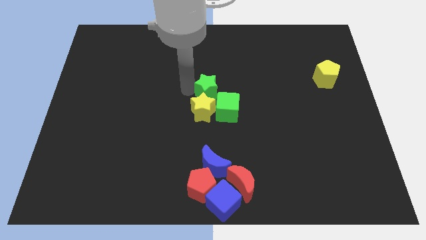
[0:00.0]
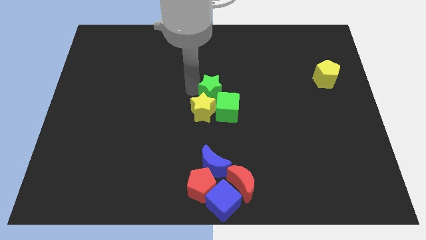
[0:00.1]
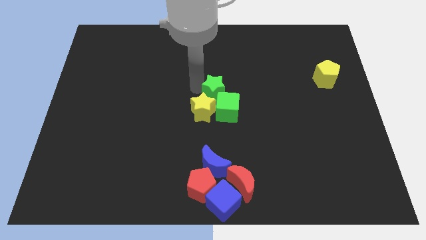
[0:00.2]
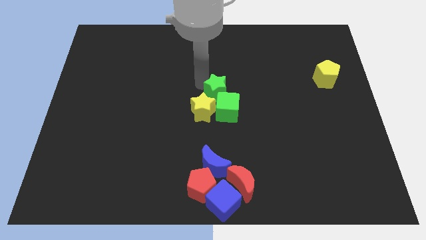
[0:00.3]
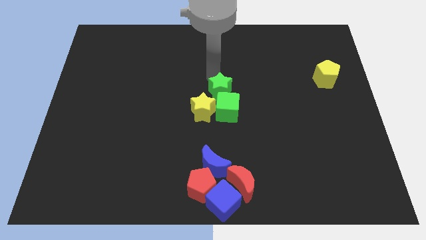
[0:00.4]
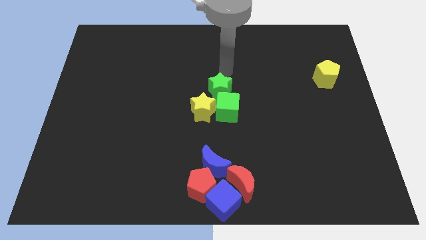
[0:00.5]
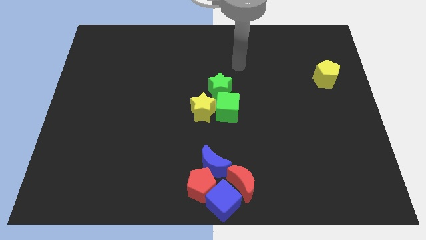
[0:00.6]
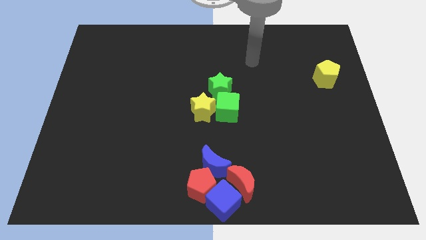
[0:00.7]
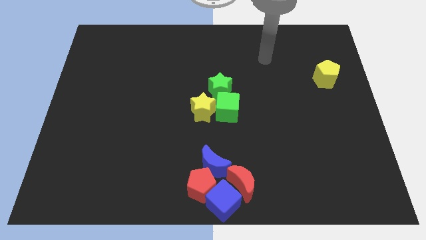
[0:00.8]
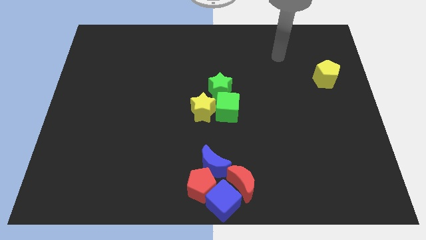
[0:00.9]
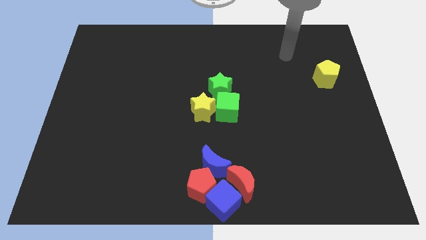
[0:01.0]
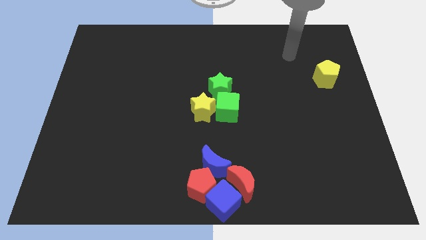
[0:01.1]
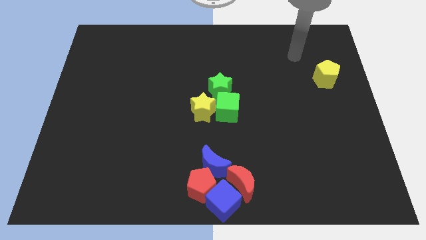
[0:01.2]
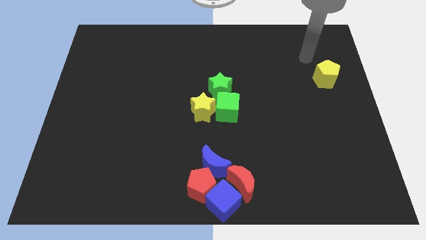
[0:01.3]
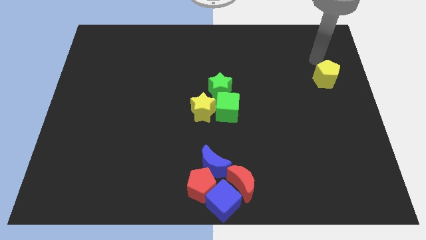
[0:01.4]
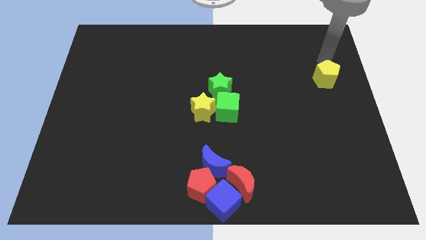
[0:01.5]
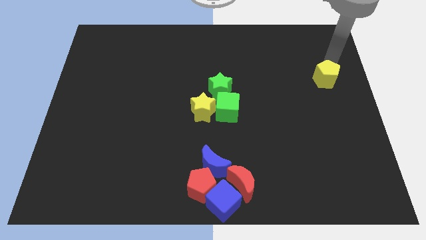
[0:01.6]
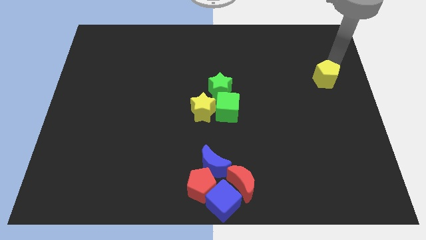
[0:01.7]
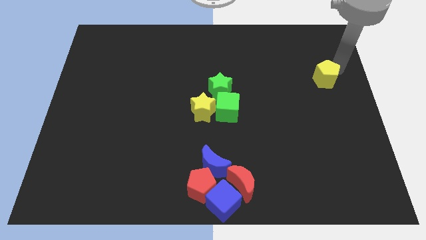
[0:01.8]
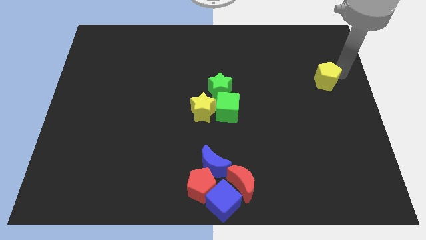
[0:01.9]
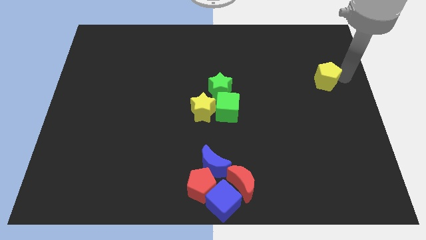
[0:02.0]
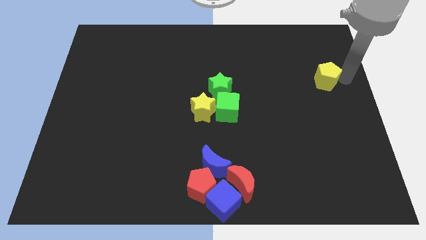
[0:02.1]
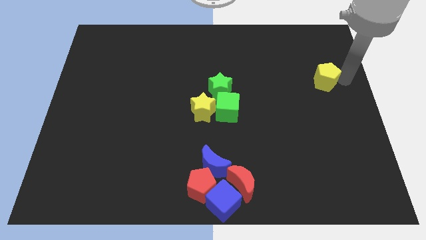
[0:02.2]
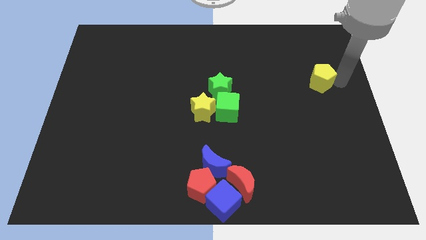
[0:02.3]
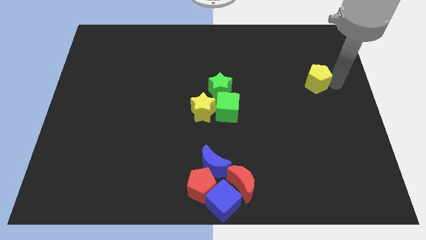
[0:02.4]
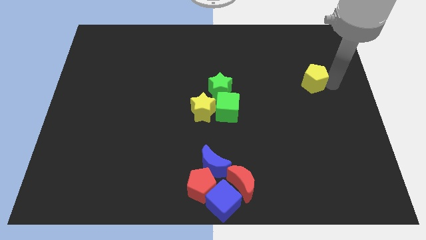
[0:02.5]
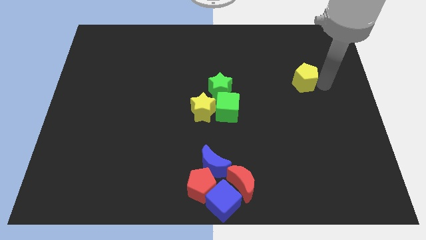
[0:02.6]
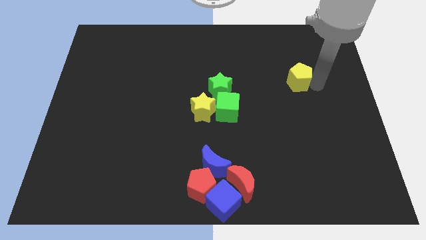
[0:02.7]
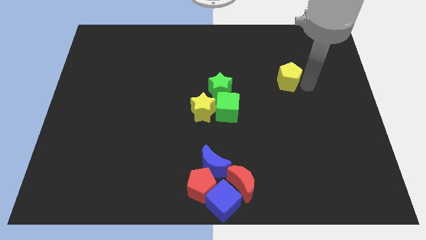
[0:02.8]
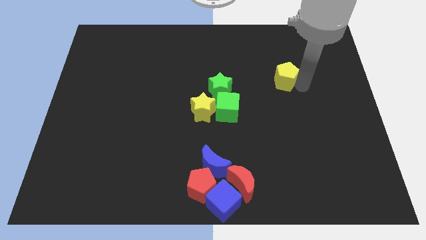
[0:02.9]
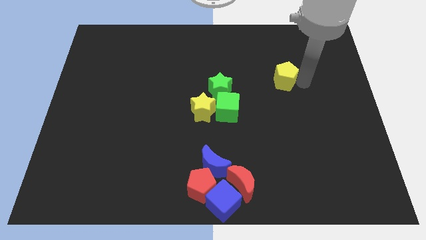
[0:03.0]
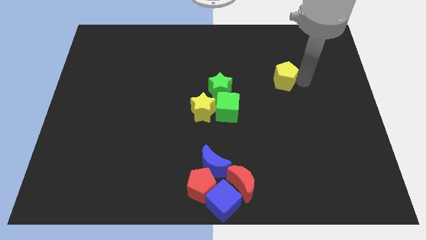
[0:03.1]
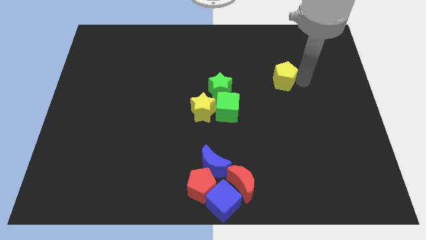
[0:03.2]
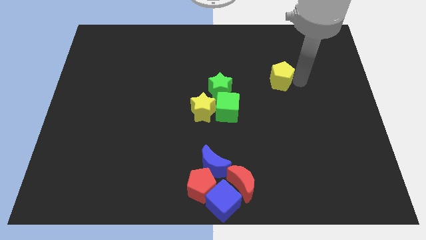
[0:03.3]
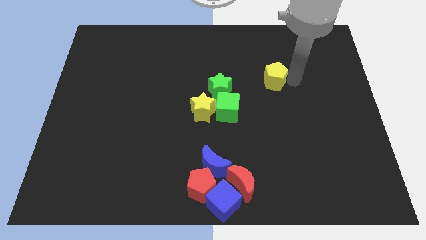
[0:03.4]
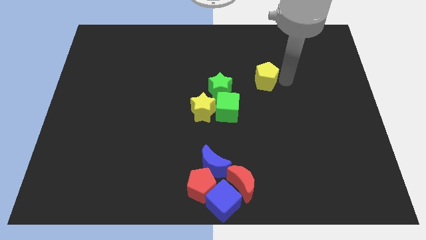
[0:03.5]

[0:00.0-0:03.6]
move the yellow pentagon slightly towards the left side

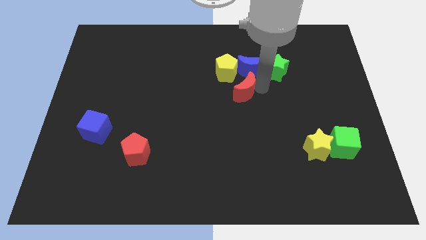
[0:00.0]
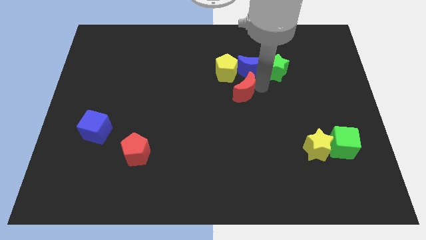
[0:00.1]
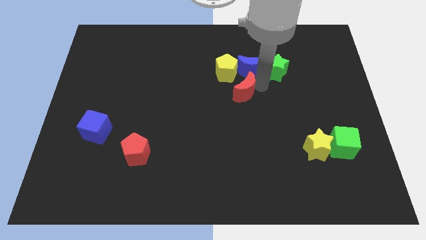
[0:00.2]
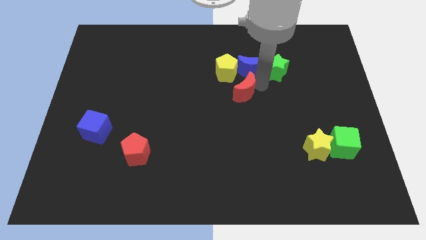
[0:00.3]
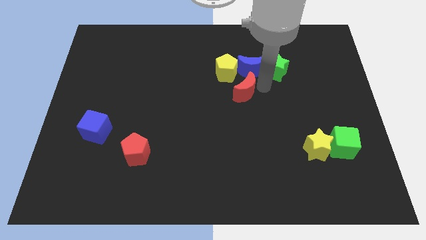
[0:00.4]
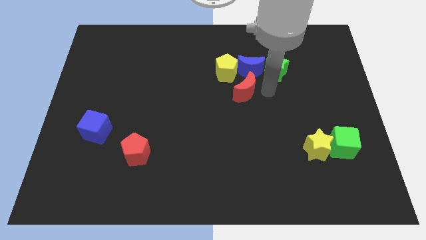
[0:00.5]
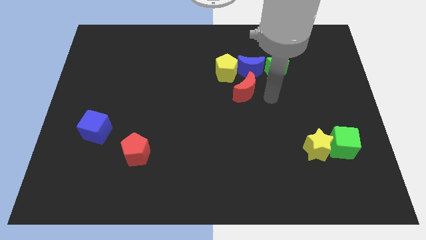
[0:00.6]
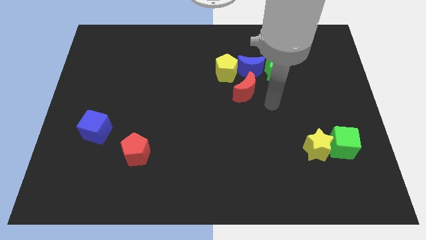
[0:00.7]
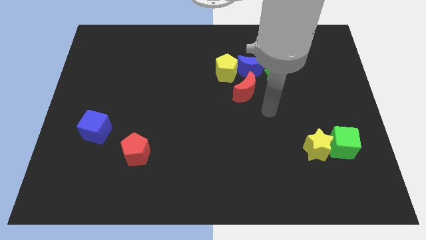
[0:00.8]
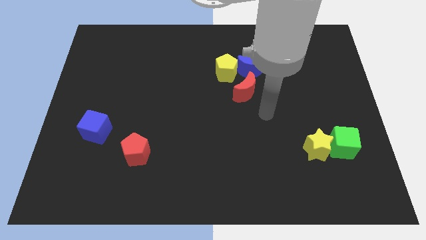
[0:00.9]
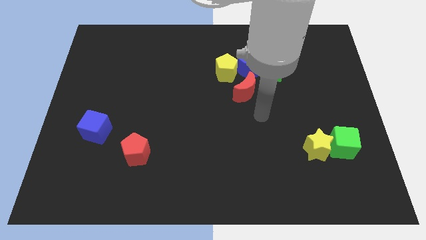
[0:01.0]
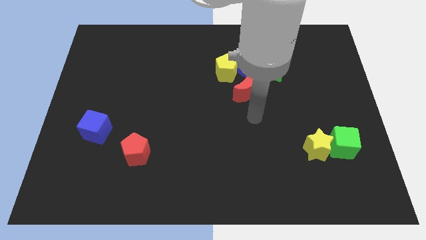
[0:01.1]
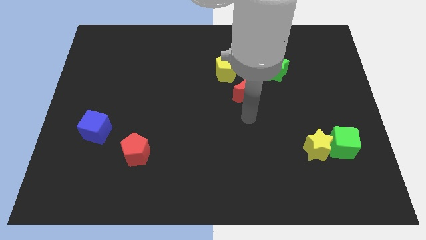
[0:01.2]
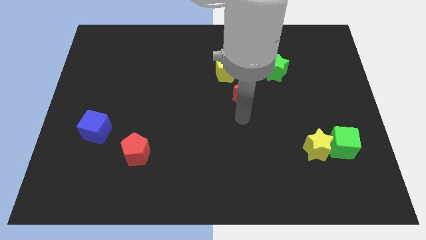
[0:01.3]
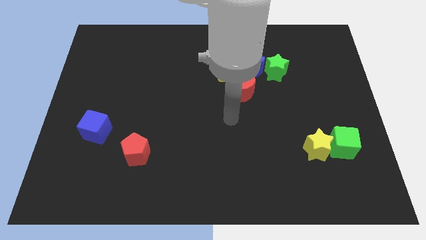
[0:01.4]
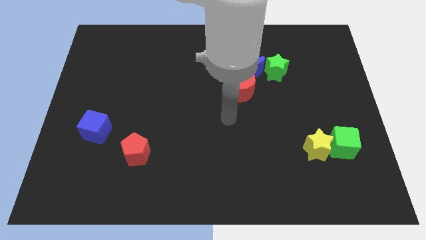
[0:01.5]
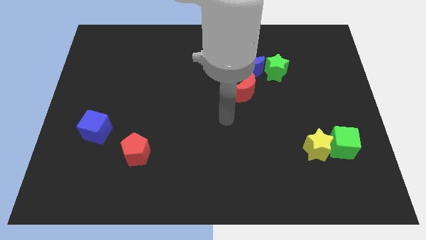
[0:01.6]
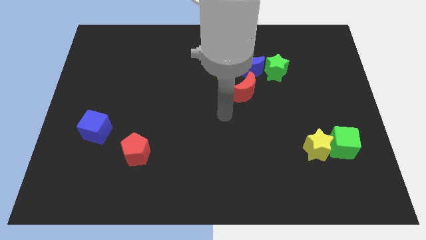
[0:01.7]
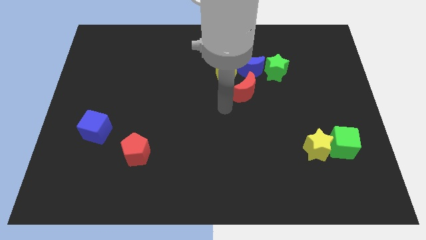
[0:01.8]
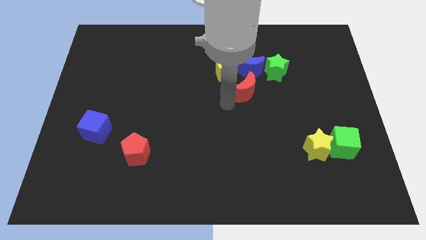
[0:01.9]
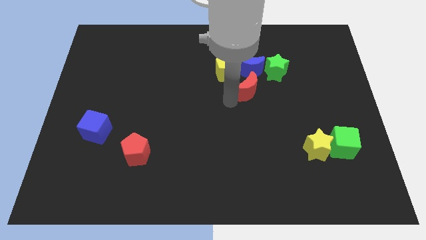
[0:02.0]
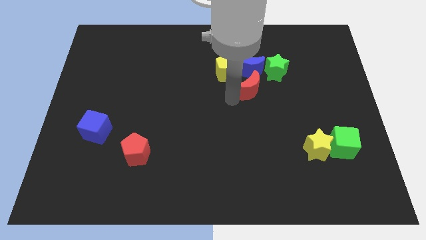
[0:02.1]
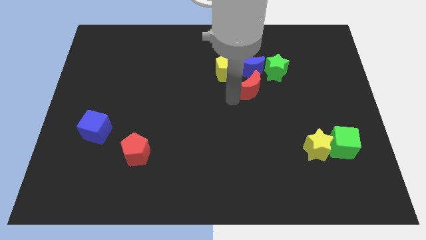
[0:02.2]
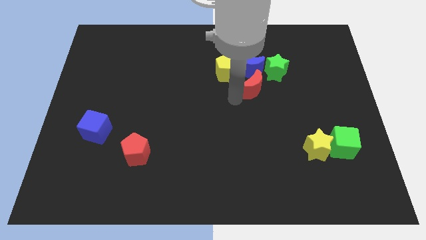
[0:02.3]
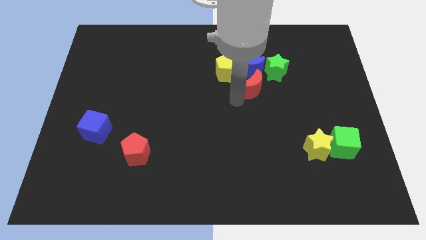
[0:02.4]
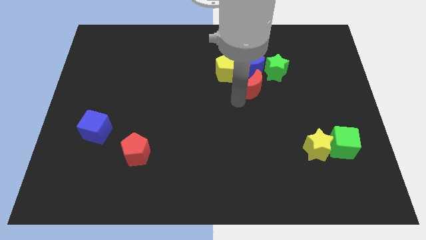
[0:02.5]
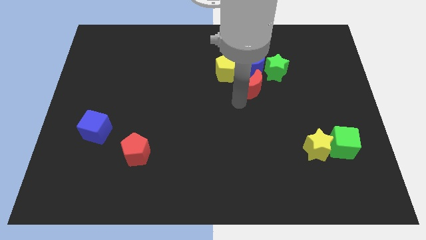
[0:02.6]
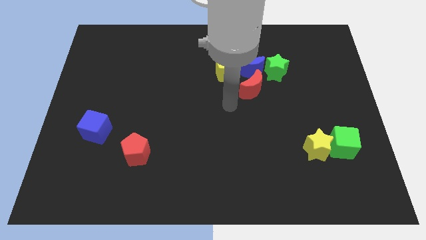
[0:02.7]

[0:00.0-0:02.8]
adjust the red crescent at the bottom of blue crescent

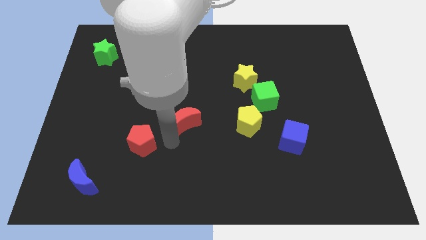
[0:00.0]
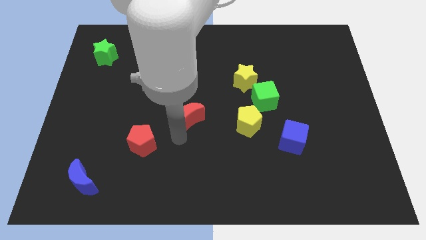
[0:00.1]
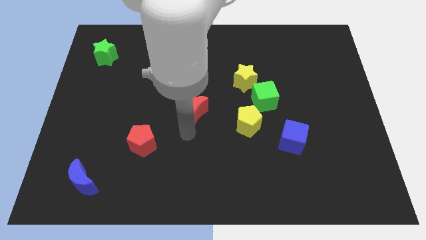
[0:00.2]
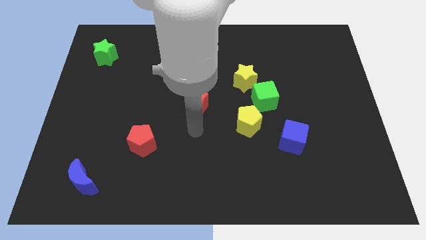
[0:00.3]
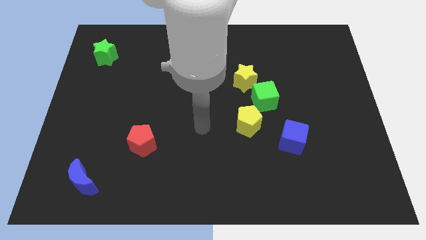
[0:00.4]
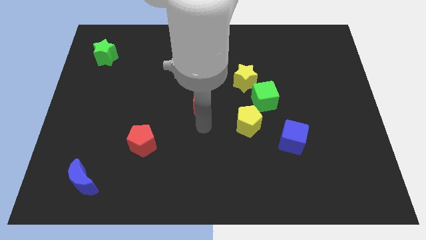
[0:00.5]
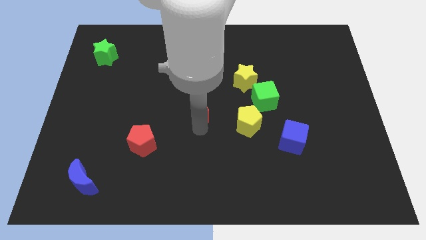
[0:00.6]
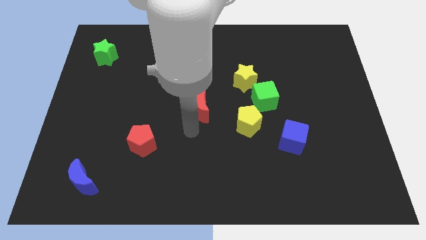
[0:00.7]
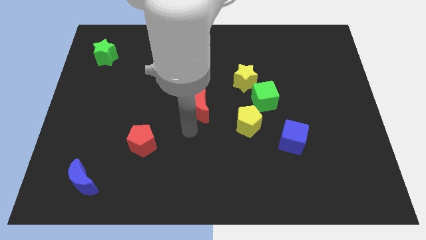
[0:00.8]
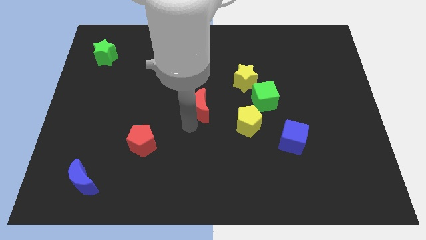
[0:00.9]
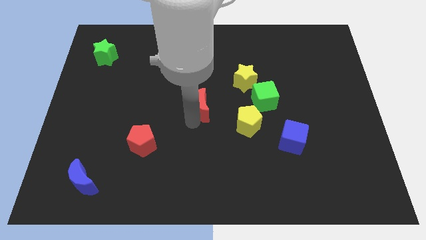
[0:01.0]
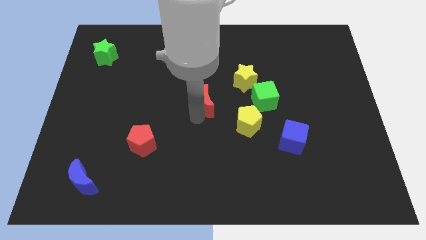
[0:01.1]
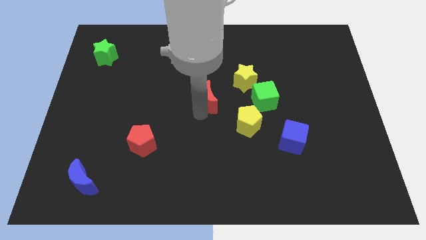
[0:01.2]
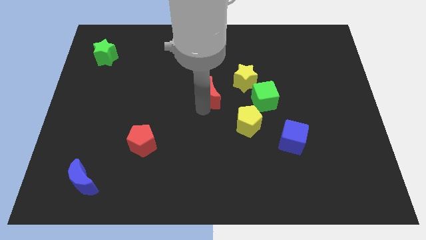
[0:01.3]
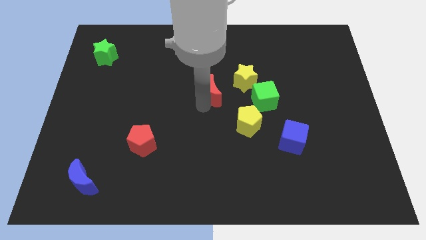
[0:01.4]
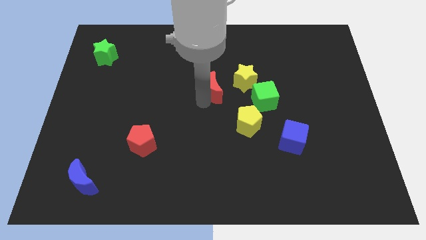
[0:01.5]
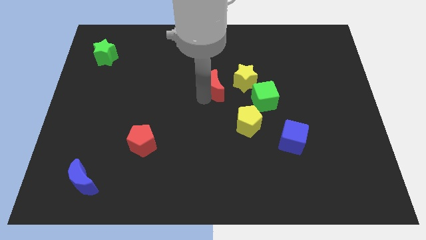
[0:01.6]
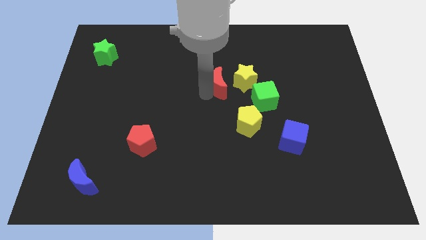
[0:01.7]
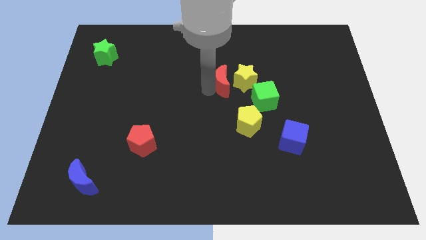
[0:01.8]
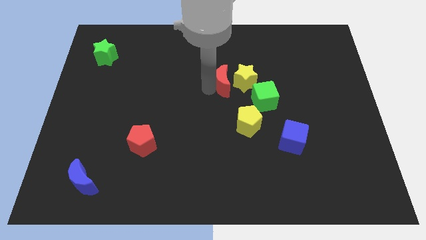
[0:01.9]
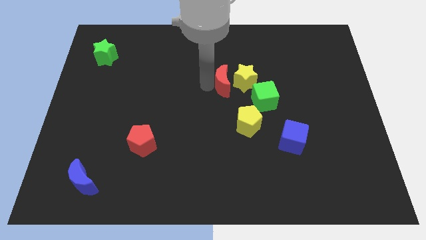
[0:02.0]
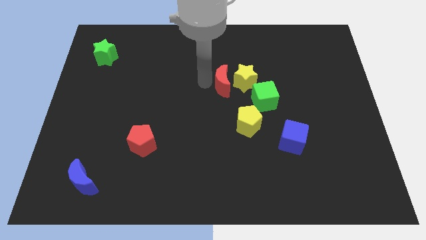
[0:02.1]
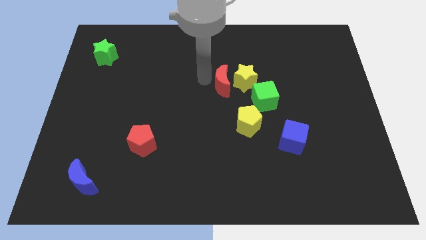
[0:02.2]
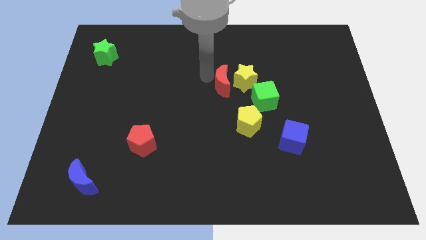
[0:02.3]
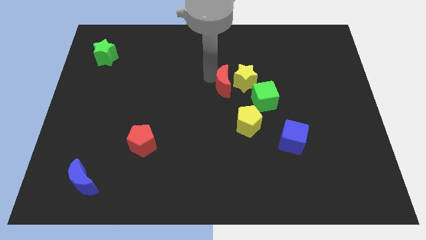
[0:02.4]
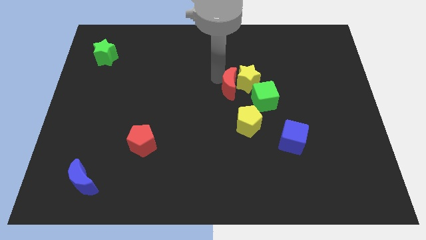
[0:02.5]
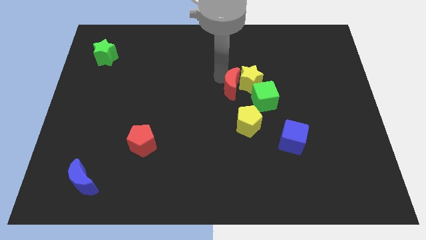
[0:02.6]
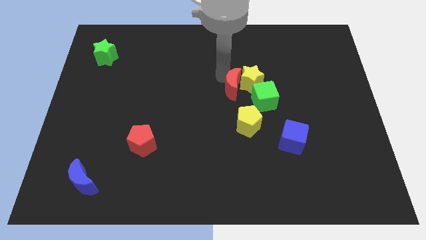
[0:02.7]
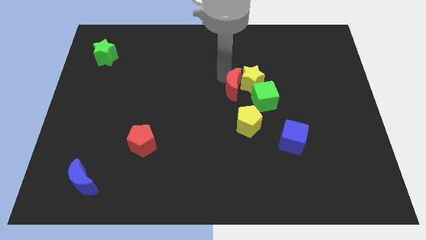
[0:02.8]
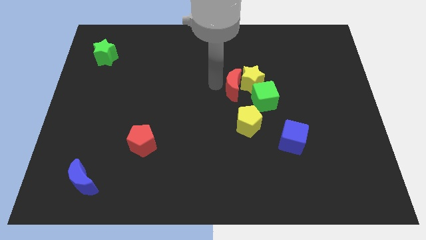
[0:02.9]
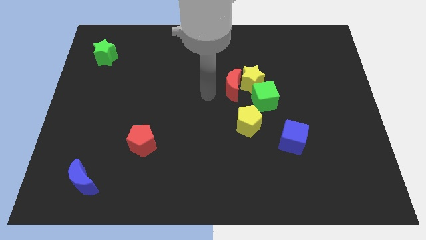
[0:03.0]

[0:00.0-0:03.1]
push the red moon into yellow star
